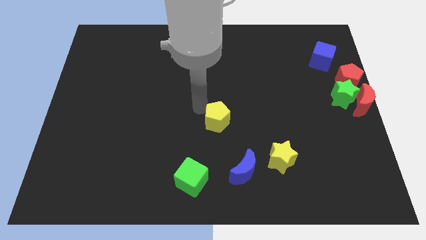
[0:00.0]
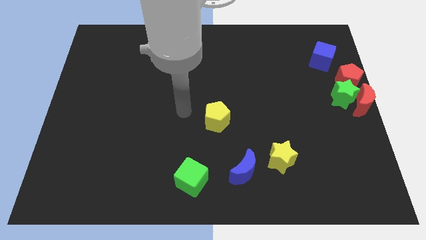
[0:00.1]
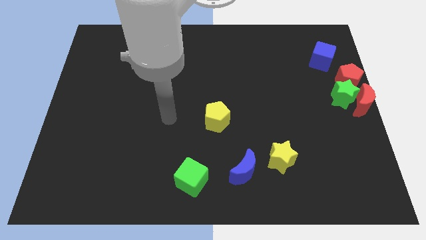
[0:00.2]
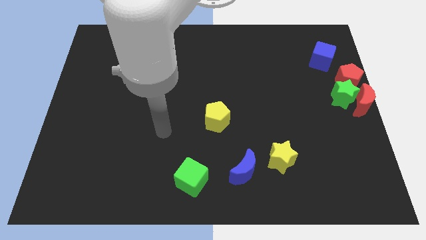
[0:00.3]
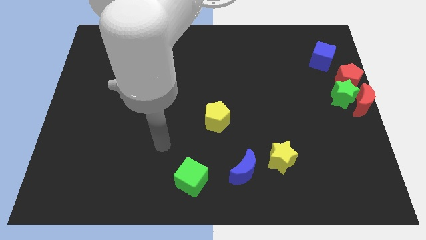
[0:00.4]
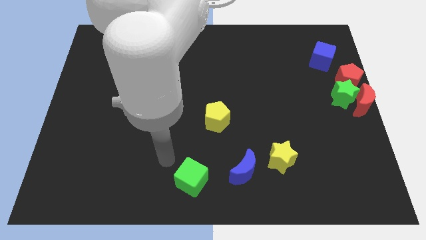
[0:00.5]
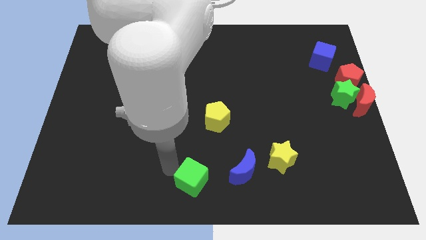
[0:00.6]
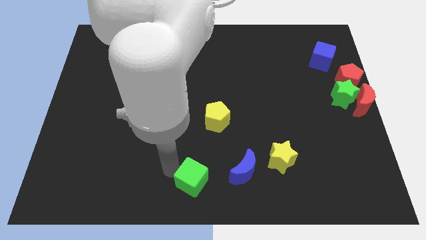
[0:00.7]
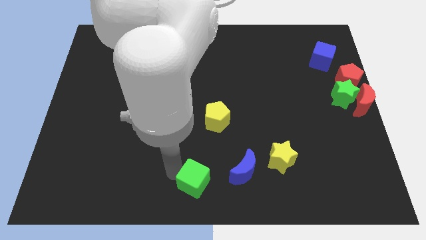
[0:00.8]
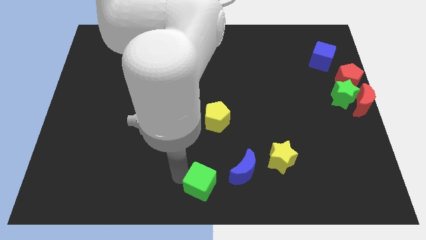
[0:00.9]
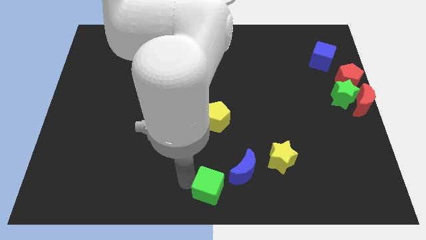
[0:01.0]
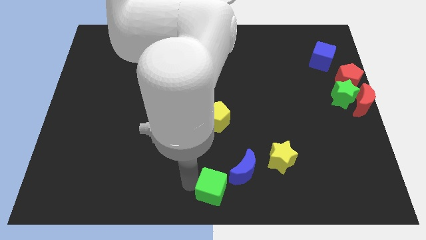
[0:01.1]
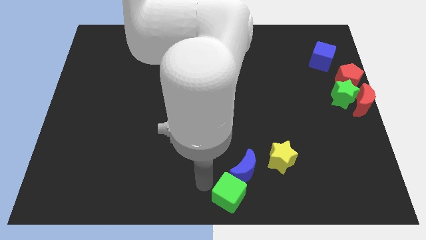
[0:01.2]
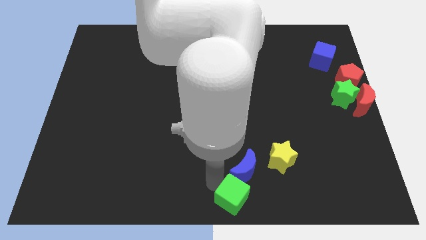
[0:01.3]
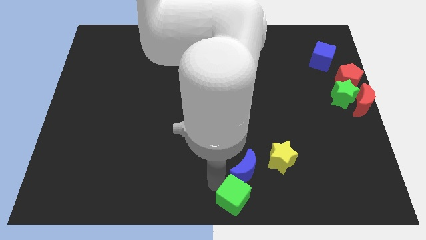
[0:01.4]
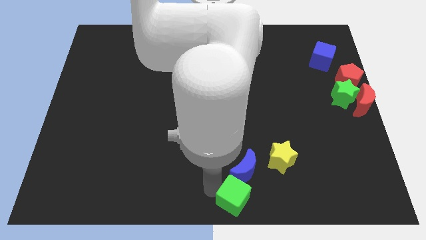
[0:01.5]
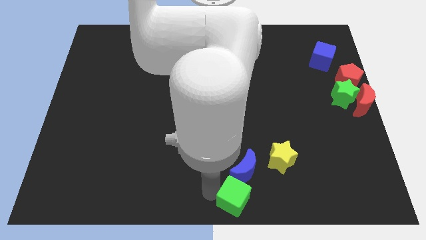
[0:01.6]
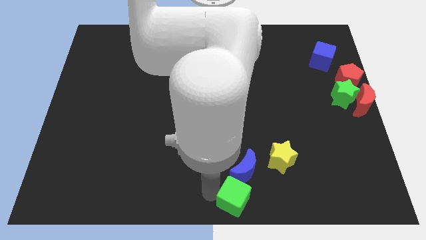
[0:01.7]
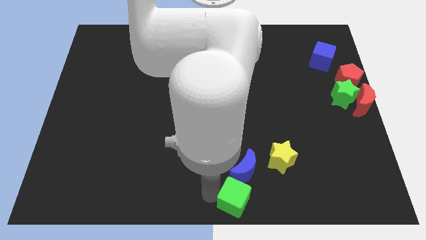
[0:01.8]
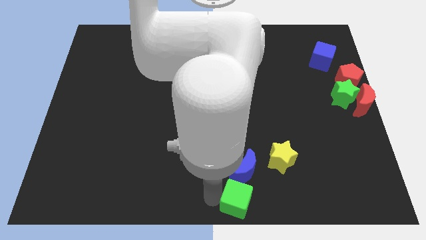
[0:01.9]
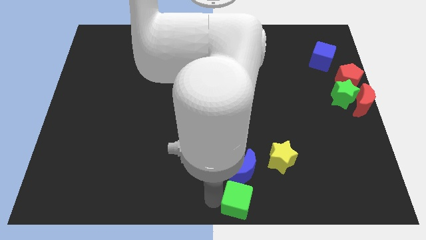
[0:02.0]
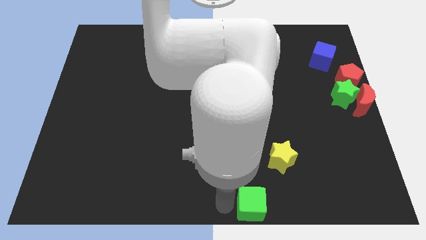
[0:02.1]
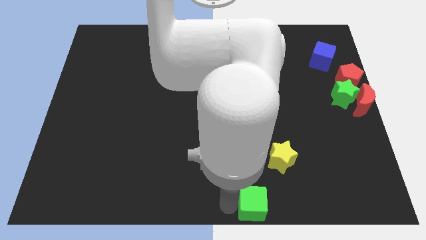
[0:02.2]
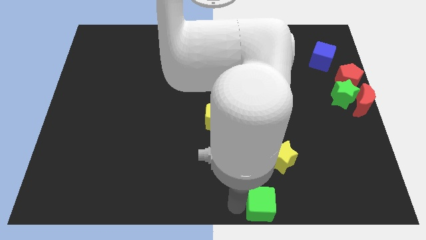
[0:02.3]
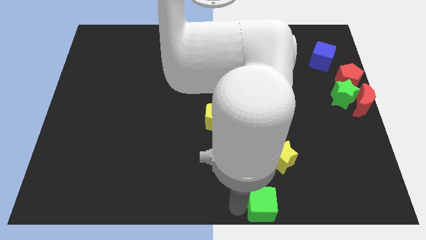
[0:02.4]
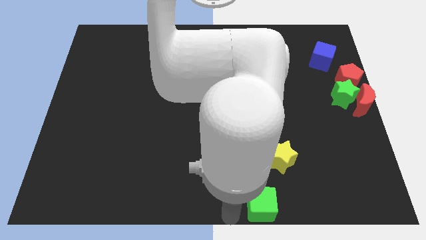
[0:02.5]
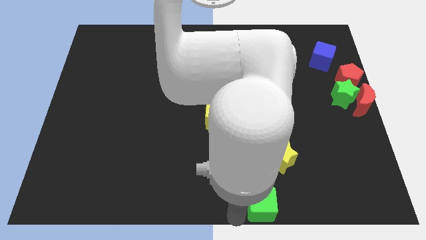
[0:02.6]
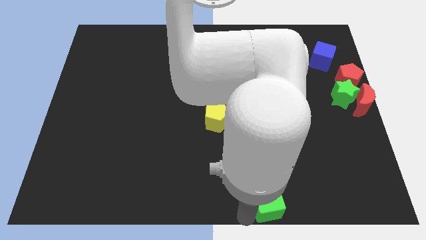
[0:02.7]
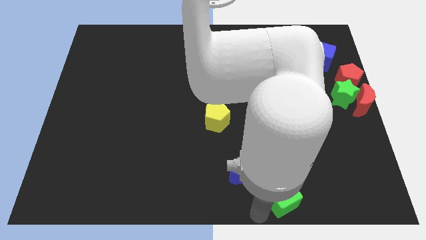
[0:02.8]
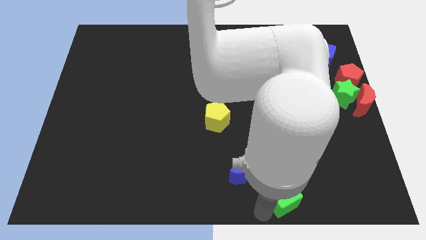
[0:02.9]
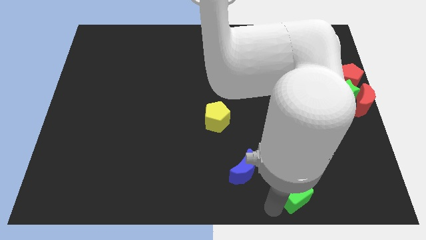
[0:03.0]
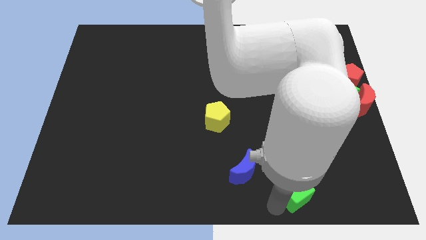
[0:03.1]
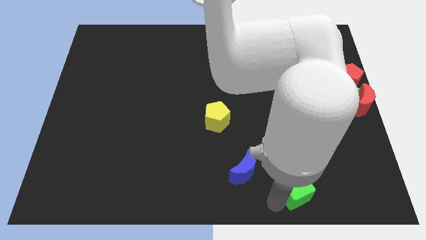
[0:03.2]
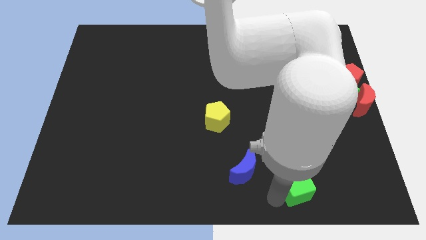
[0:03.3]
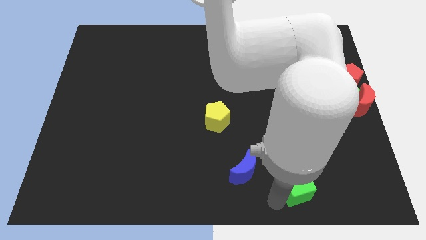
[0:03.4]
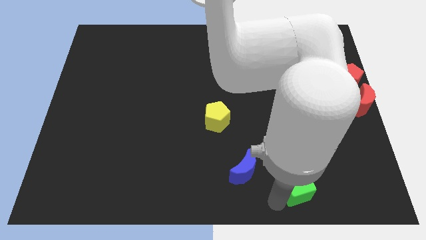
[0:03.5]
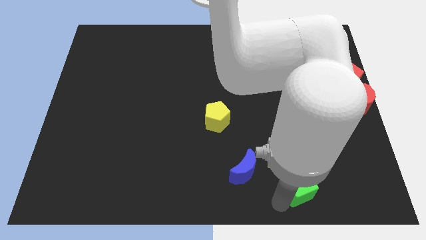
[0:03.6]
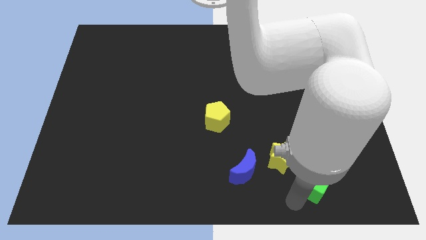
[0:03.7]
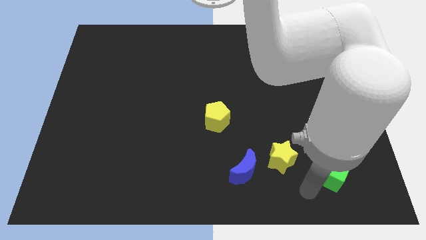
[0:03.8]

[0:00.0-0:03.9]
push the green cube vertical to the yellow star

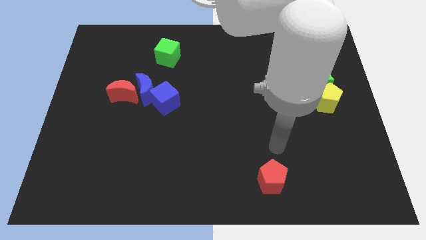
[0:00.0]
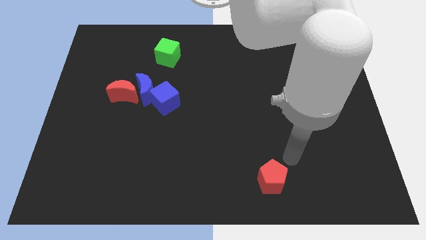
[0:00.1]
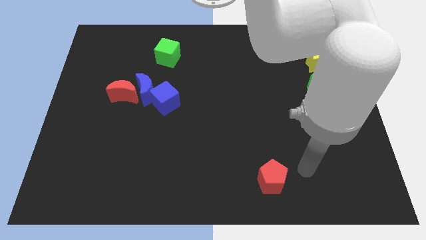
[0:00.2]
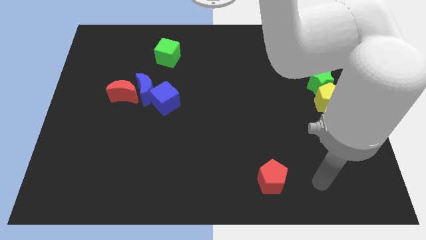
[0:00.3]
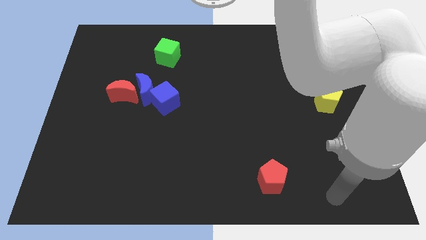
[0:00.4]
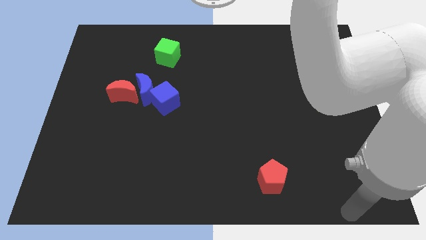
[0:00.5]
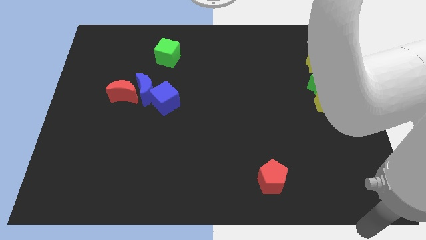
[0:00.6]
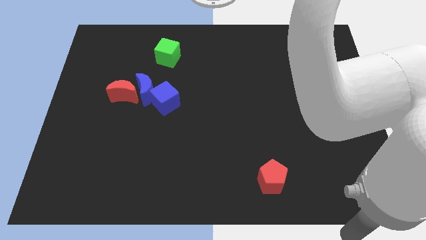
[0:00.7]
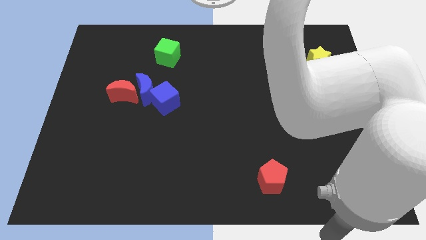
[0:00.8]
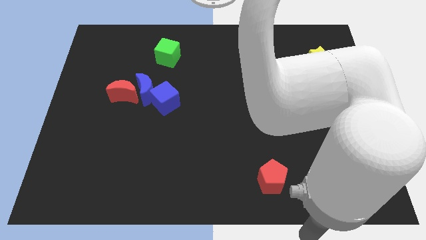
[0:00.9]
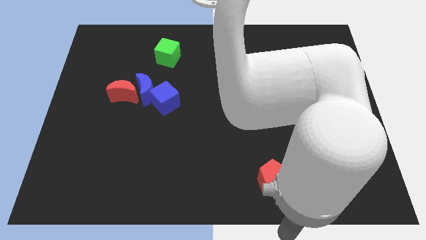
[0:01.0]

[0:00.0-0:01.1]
move your arm out of to the bottom center of the board

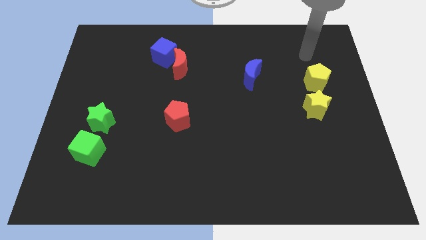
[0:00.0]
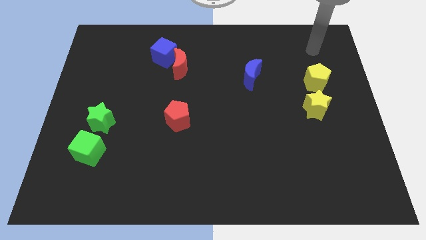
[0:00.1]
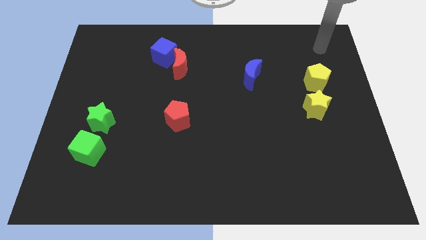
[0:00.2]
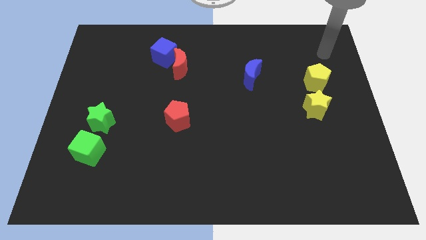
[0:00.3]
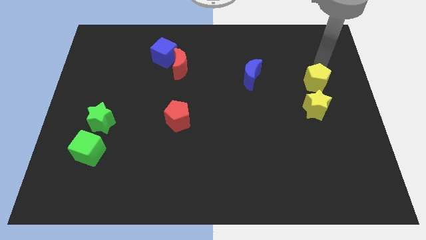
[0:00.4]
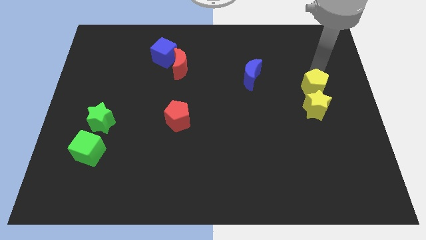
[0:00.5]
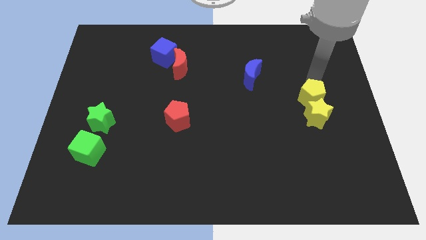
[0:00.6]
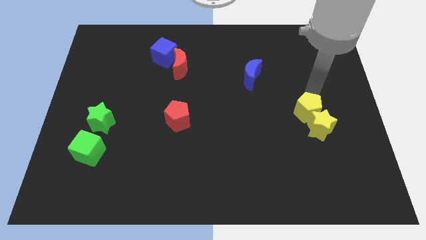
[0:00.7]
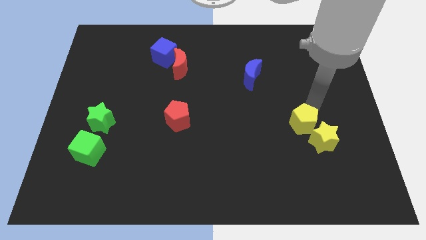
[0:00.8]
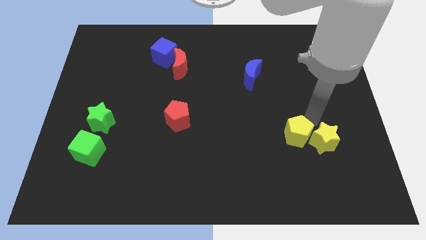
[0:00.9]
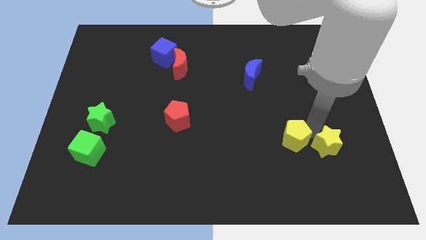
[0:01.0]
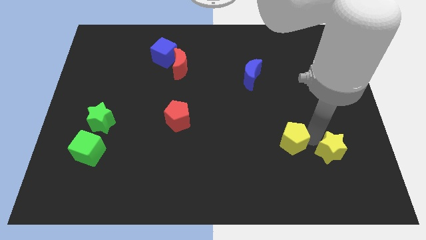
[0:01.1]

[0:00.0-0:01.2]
push the yellow pentagon to the left of the yellow star

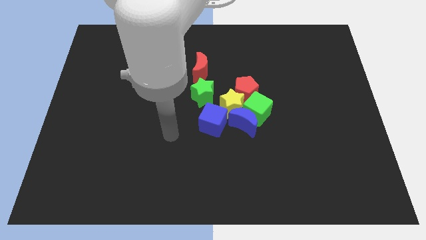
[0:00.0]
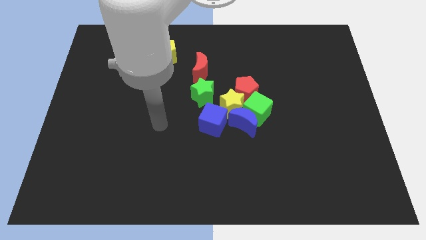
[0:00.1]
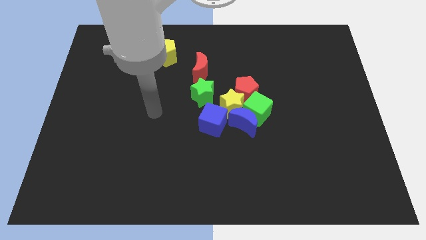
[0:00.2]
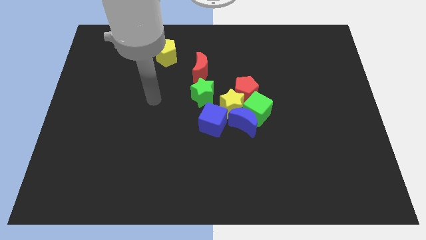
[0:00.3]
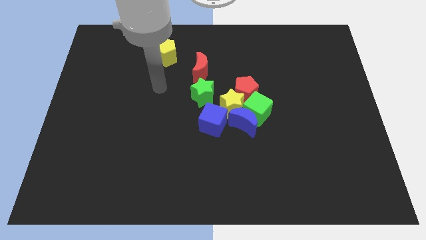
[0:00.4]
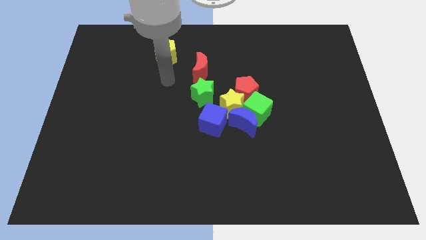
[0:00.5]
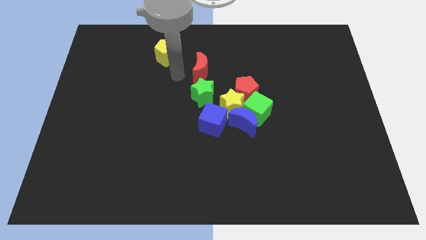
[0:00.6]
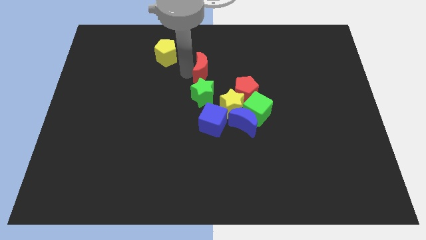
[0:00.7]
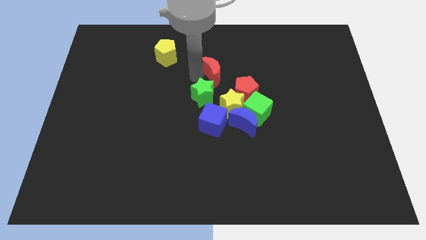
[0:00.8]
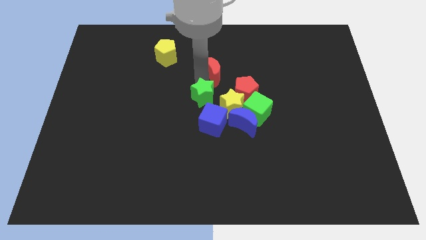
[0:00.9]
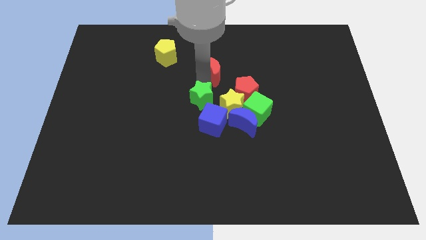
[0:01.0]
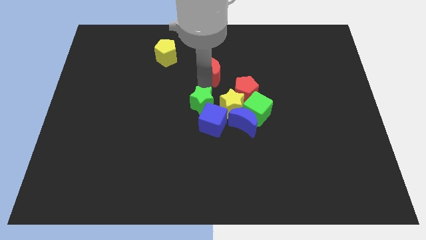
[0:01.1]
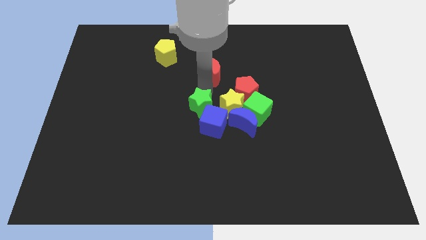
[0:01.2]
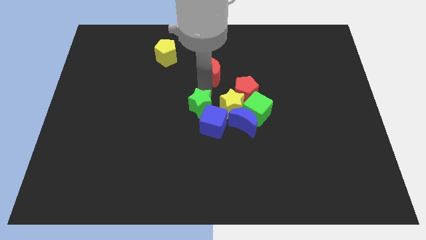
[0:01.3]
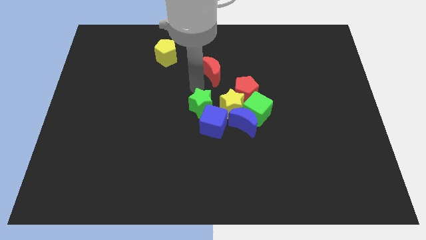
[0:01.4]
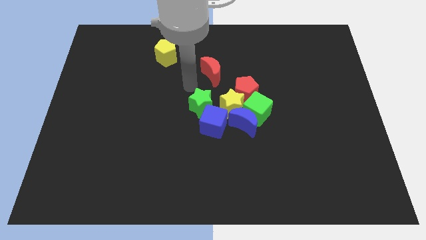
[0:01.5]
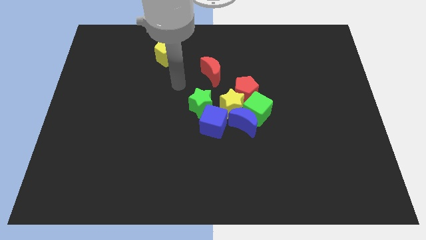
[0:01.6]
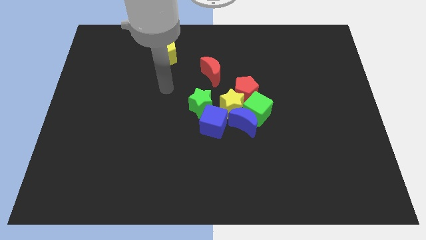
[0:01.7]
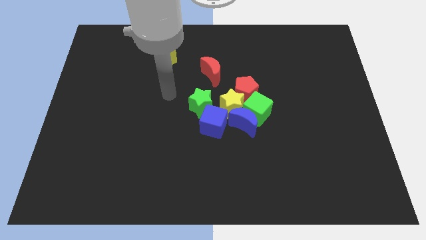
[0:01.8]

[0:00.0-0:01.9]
move the green star into the blue cube

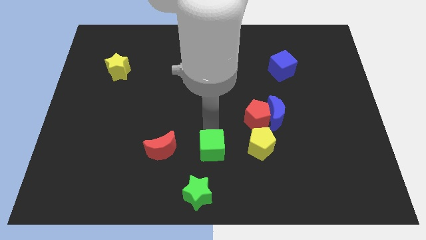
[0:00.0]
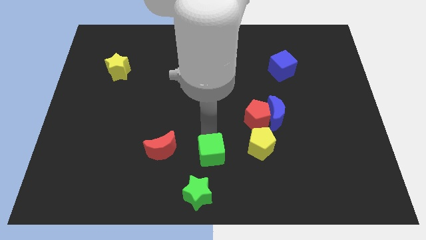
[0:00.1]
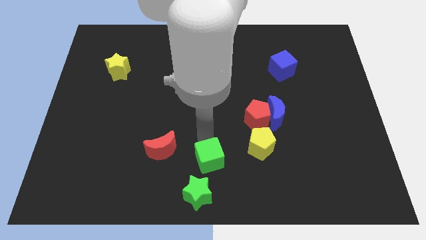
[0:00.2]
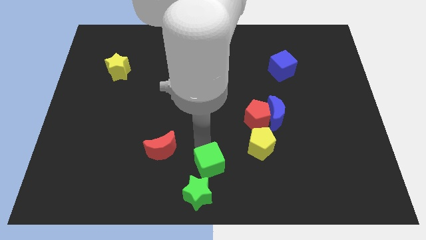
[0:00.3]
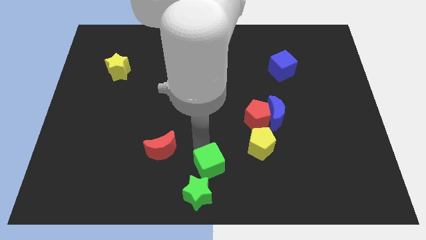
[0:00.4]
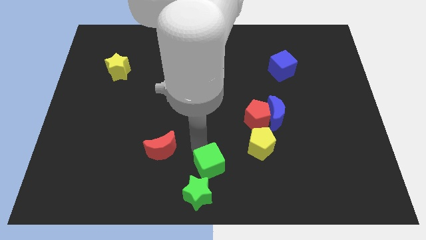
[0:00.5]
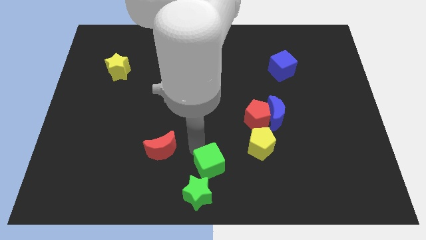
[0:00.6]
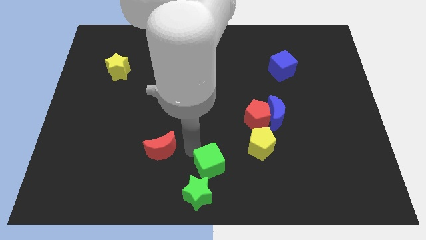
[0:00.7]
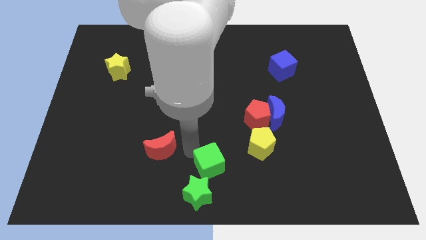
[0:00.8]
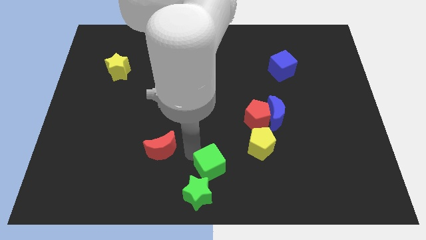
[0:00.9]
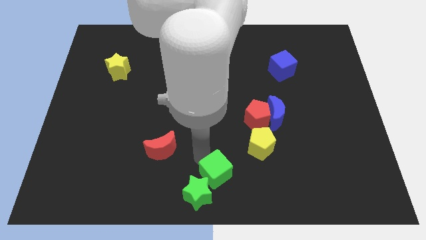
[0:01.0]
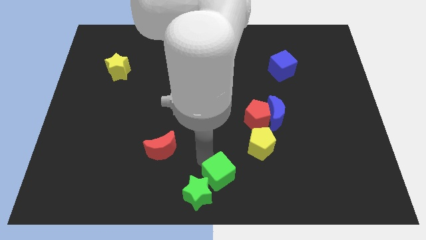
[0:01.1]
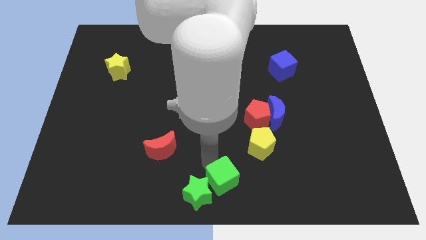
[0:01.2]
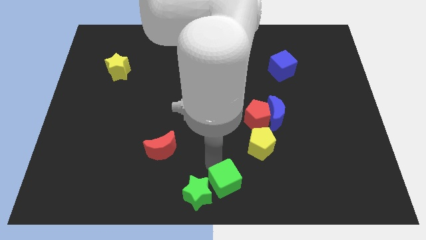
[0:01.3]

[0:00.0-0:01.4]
drag the green cube to the bottom center
